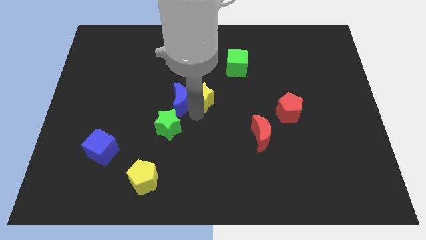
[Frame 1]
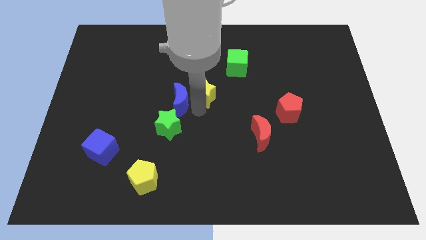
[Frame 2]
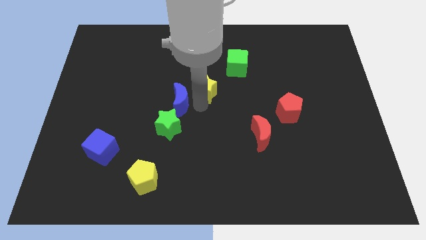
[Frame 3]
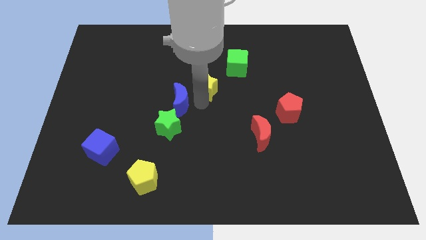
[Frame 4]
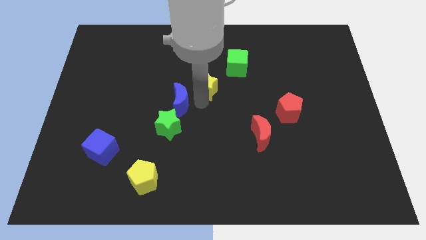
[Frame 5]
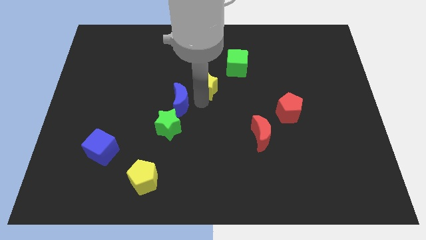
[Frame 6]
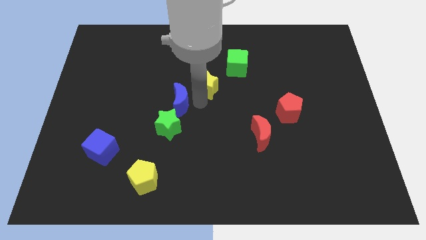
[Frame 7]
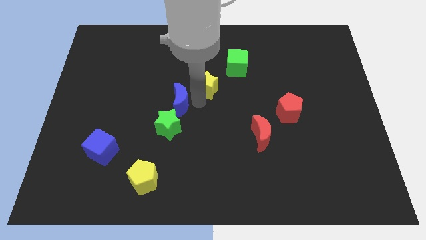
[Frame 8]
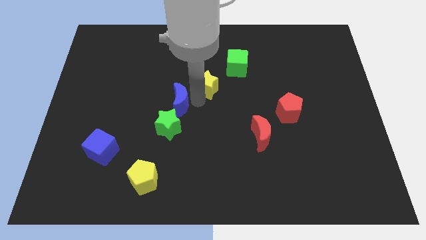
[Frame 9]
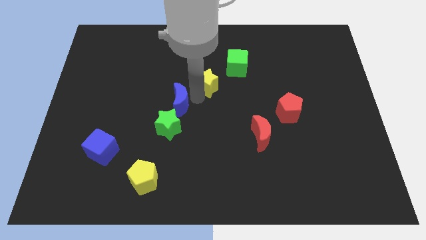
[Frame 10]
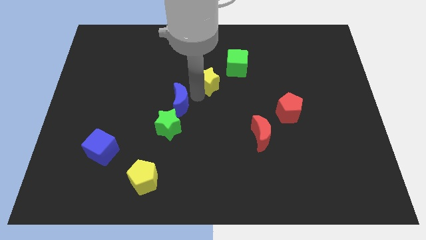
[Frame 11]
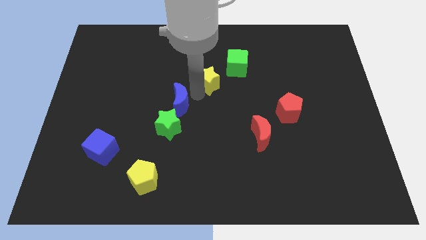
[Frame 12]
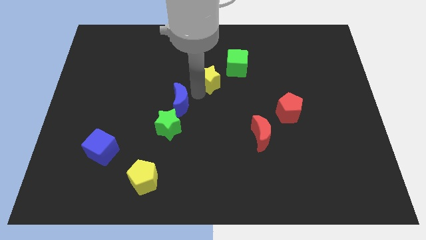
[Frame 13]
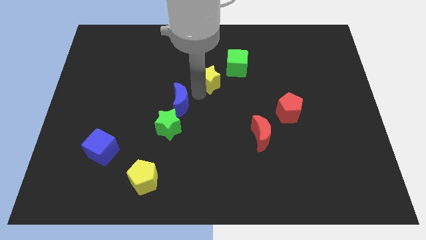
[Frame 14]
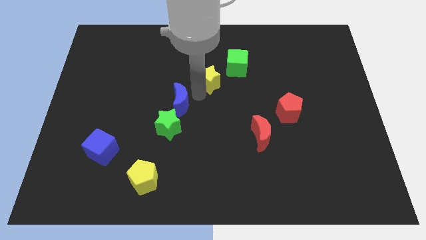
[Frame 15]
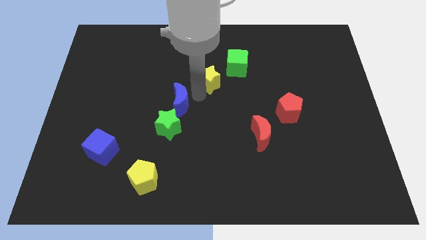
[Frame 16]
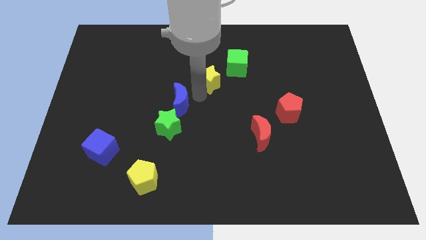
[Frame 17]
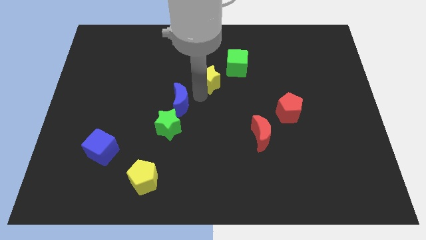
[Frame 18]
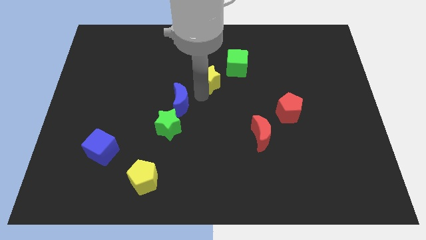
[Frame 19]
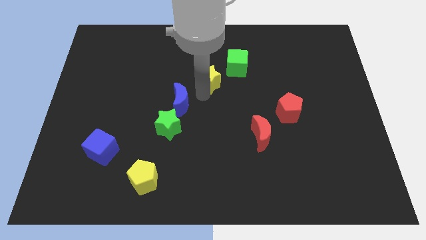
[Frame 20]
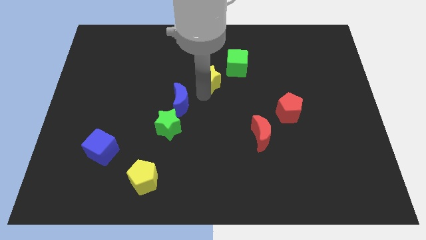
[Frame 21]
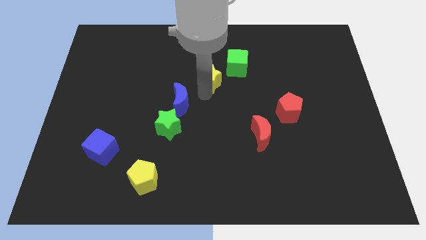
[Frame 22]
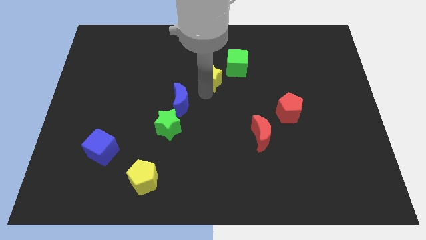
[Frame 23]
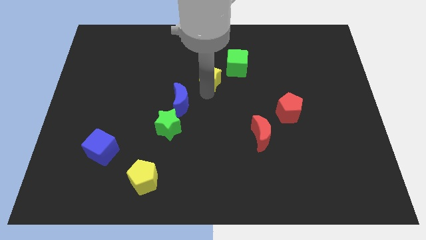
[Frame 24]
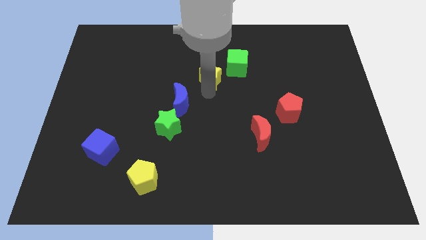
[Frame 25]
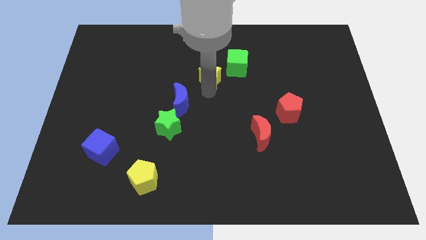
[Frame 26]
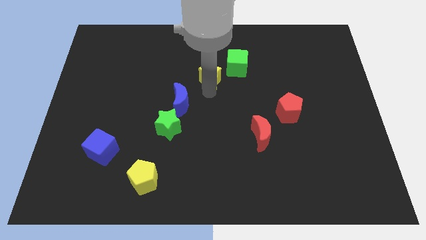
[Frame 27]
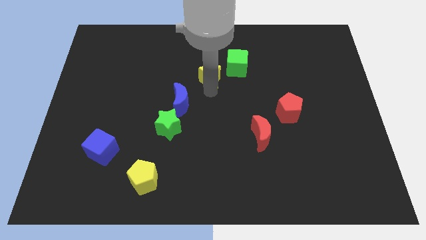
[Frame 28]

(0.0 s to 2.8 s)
move the yellow star diagonally in between the green cube and blue crescent

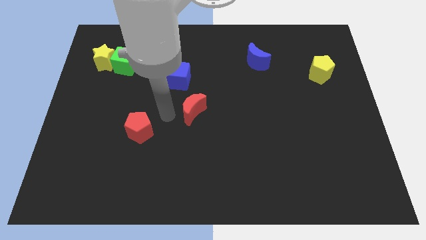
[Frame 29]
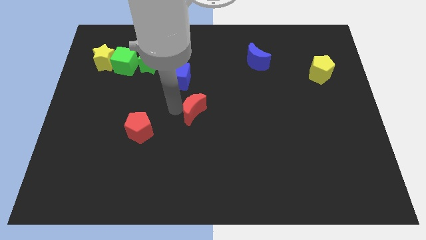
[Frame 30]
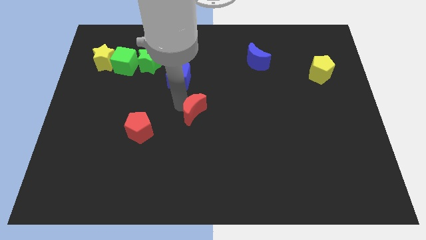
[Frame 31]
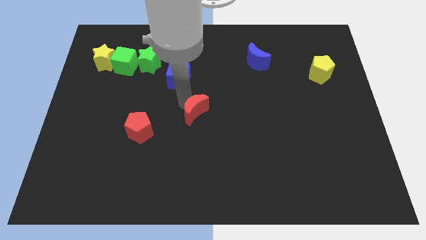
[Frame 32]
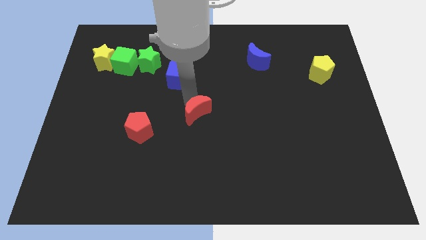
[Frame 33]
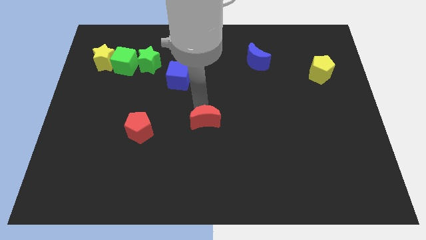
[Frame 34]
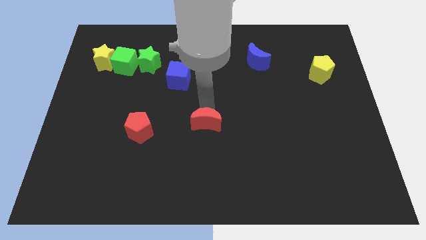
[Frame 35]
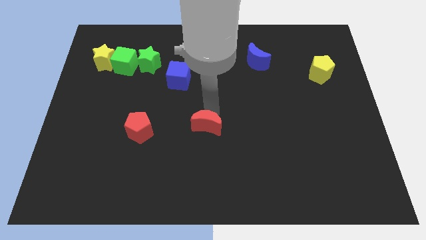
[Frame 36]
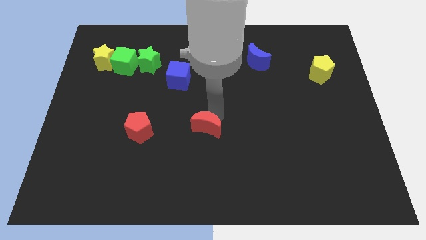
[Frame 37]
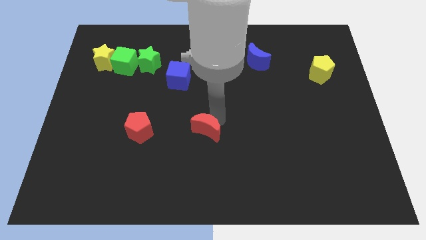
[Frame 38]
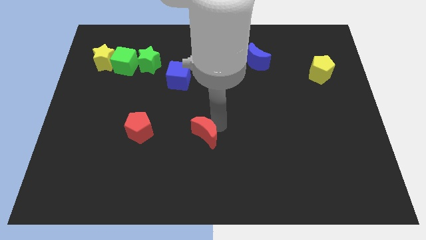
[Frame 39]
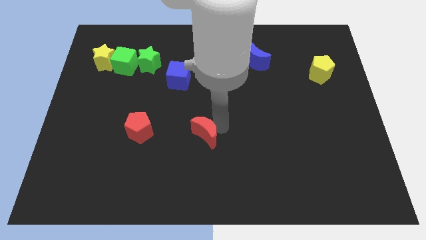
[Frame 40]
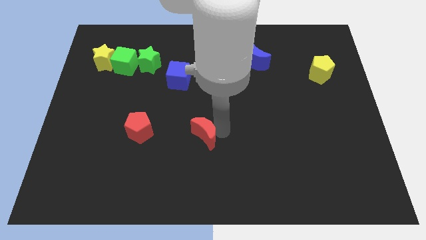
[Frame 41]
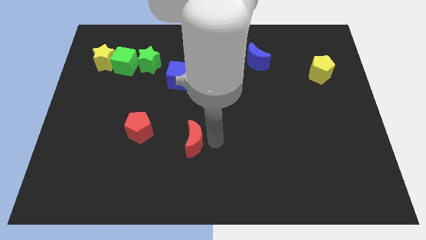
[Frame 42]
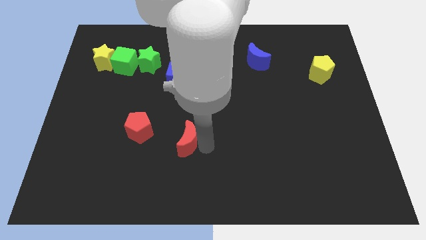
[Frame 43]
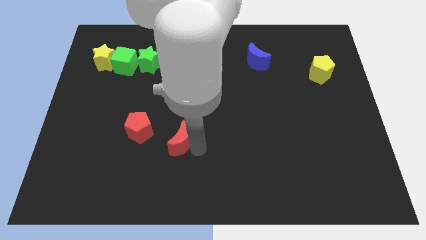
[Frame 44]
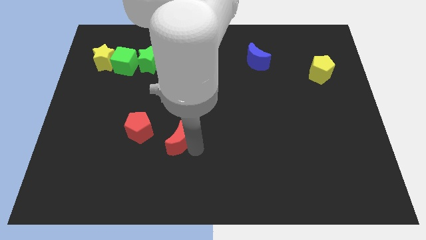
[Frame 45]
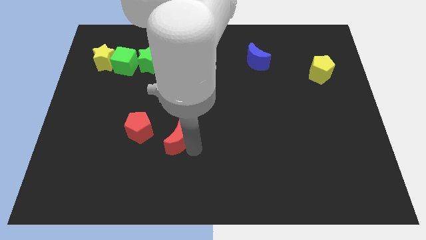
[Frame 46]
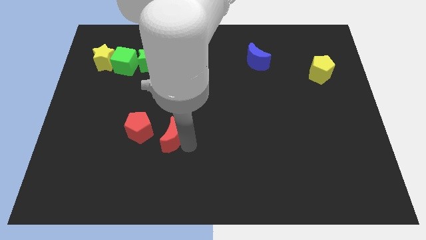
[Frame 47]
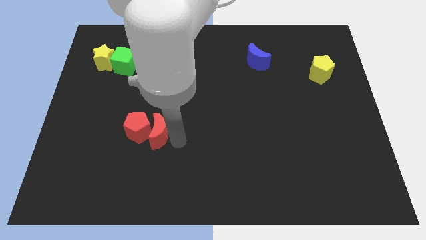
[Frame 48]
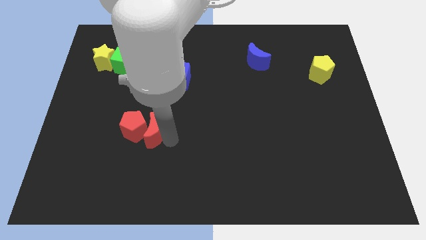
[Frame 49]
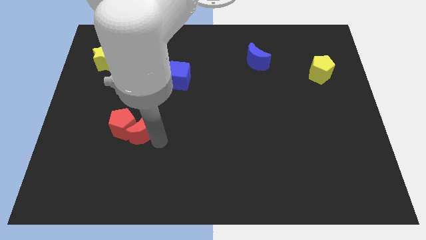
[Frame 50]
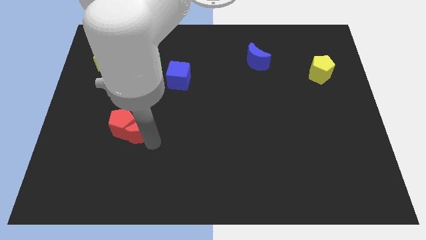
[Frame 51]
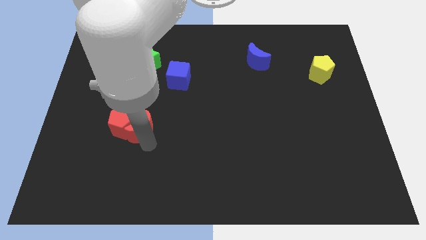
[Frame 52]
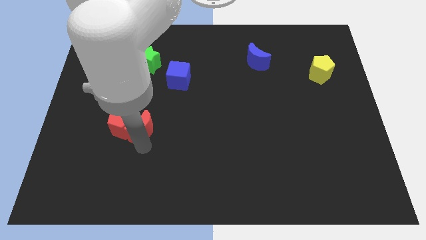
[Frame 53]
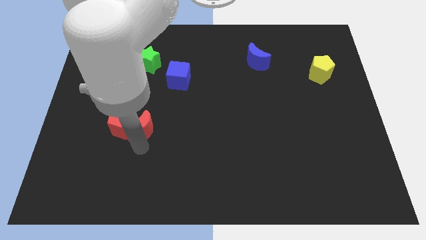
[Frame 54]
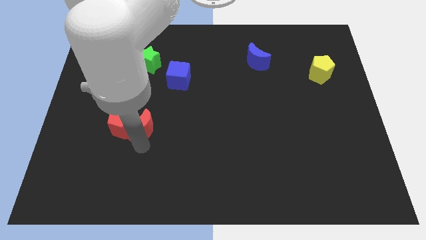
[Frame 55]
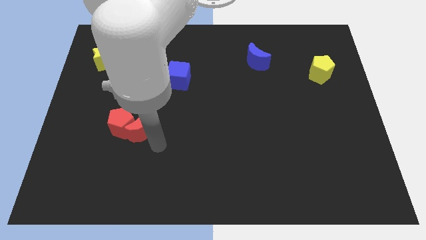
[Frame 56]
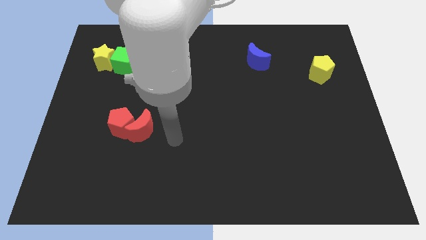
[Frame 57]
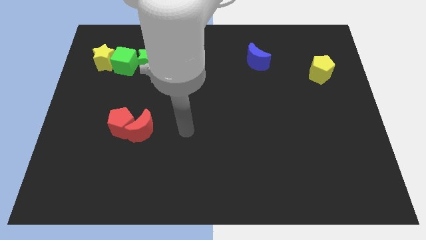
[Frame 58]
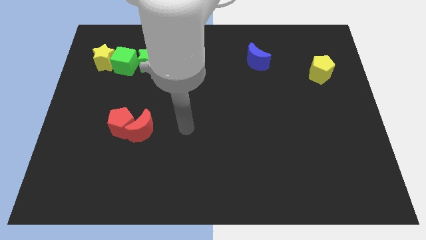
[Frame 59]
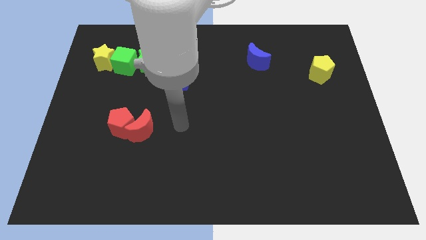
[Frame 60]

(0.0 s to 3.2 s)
push the red crescent into the red pentagon

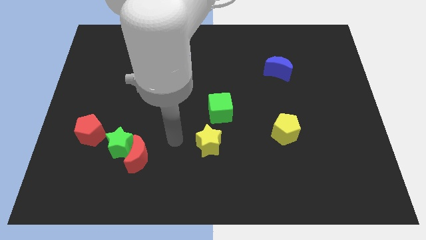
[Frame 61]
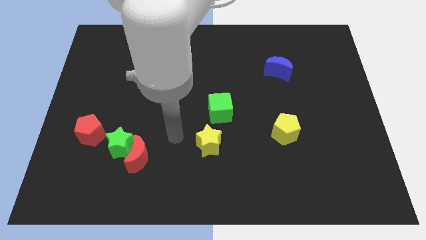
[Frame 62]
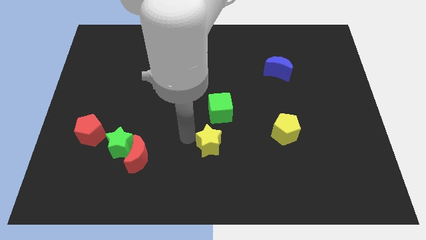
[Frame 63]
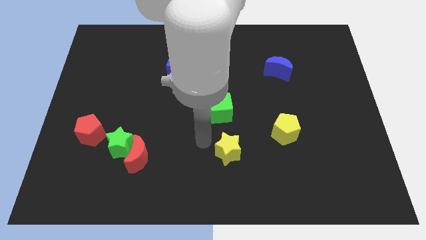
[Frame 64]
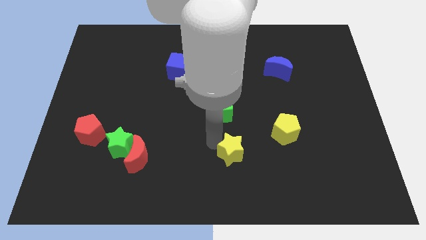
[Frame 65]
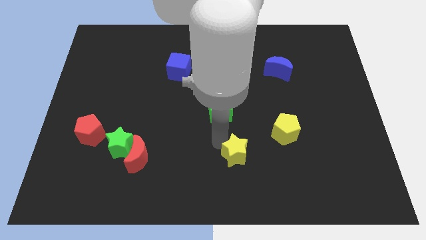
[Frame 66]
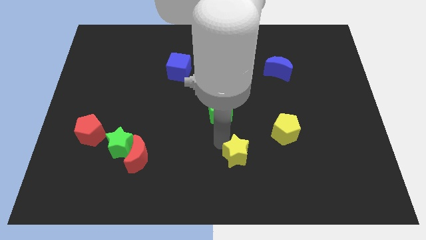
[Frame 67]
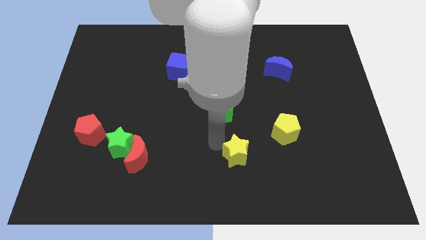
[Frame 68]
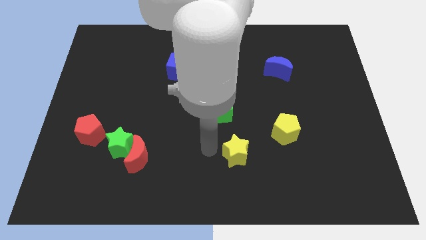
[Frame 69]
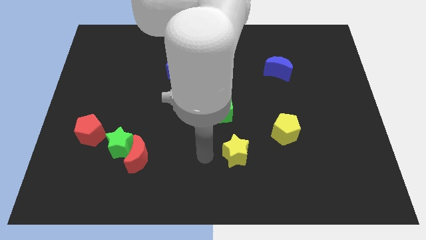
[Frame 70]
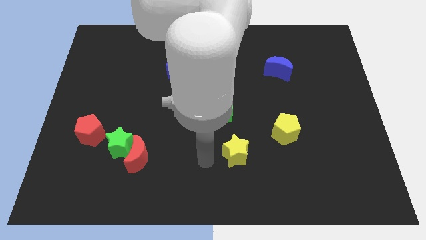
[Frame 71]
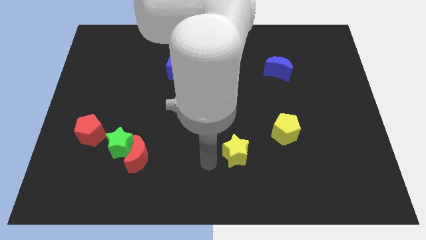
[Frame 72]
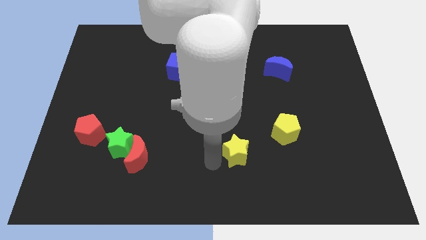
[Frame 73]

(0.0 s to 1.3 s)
push the yellow star to the bottom center

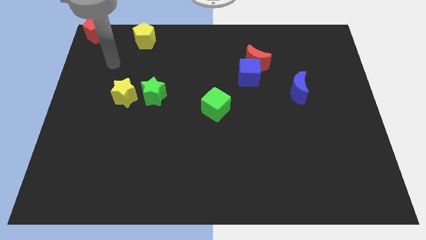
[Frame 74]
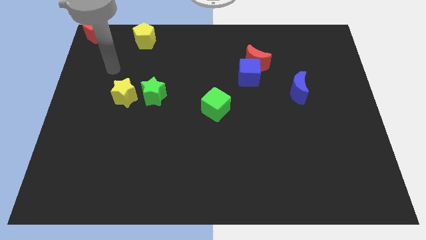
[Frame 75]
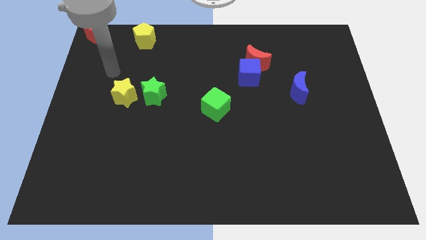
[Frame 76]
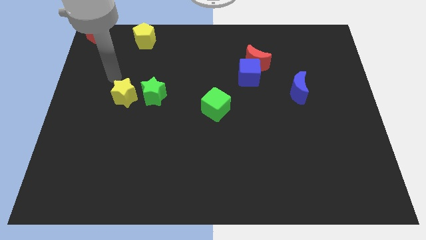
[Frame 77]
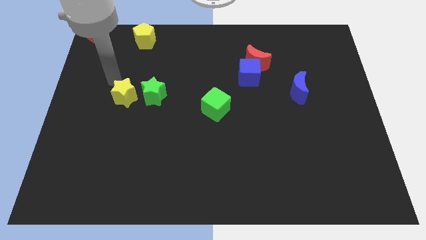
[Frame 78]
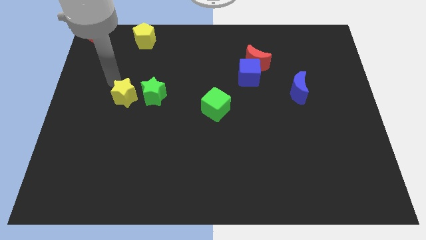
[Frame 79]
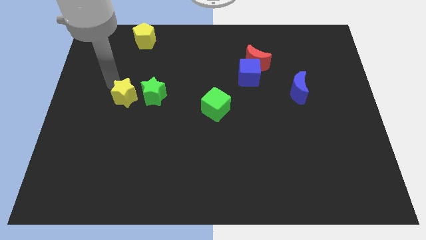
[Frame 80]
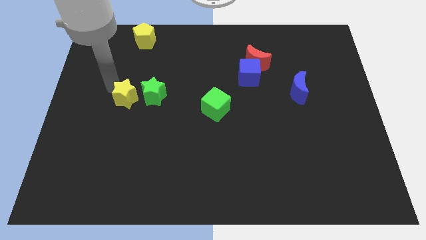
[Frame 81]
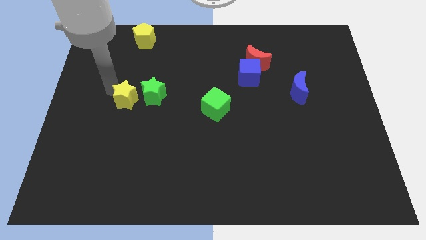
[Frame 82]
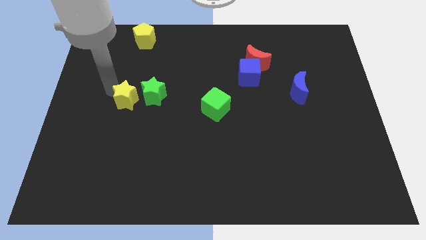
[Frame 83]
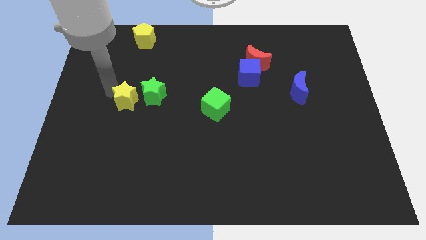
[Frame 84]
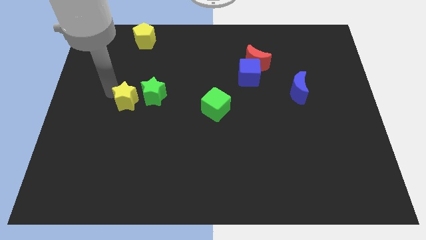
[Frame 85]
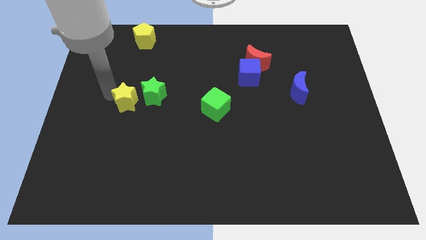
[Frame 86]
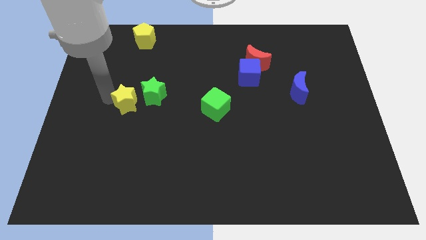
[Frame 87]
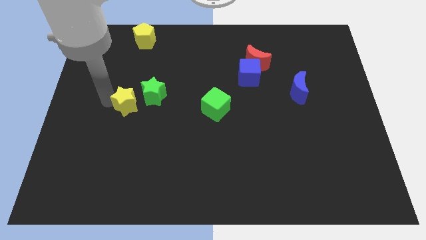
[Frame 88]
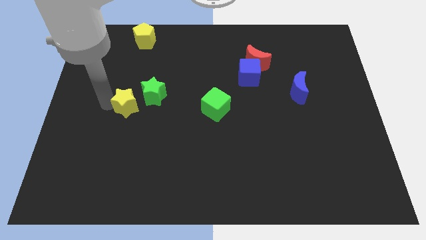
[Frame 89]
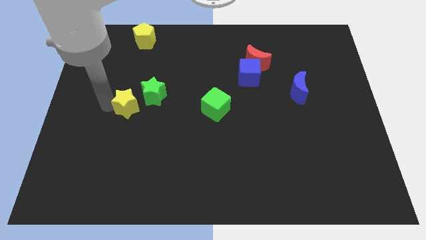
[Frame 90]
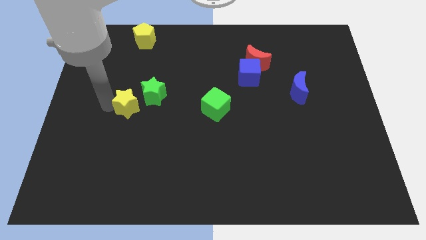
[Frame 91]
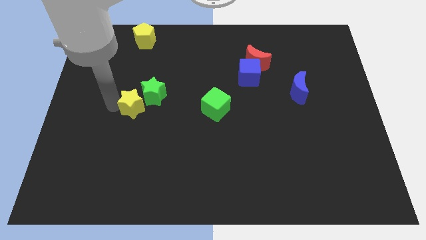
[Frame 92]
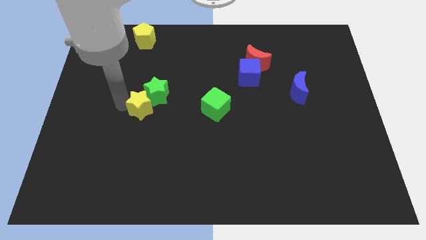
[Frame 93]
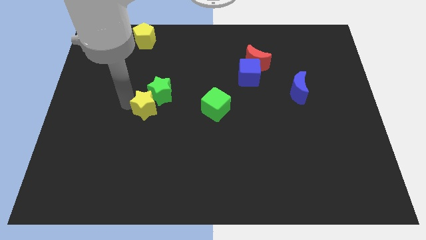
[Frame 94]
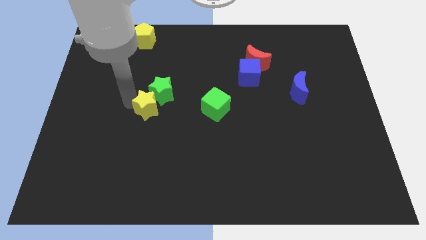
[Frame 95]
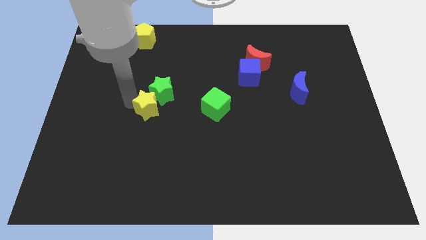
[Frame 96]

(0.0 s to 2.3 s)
push yellow star into the green star
